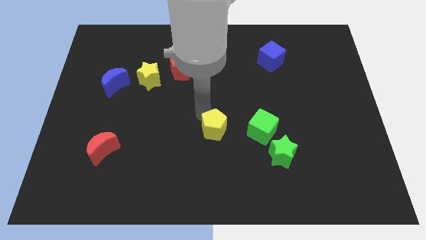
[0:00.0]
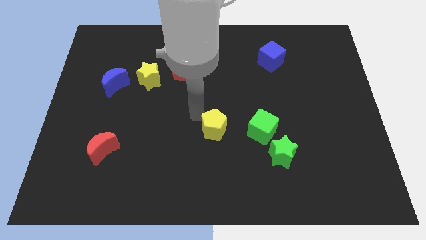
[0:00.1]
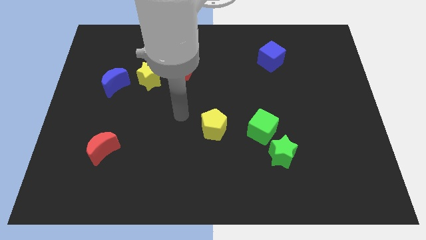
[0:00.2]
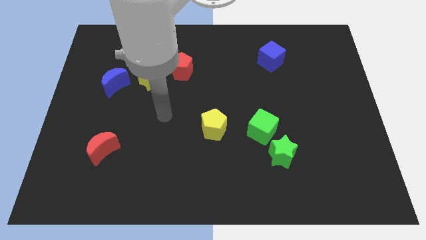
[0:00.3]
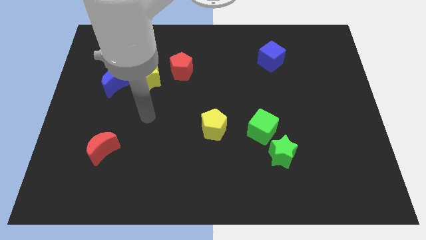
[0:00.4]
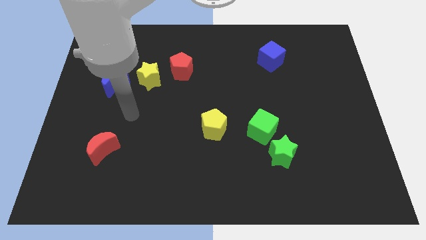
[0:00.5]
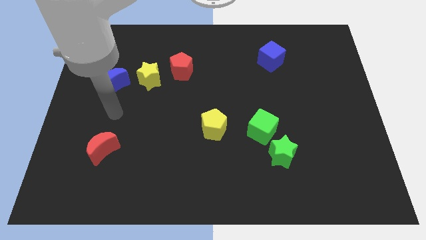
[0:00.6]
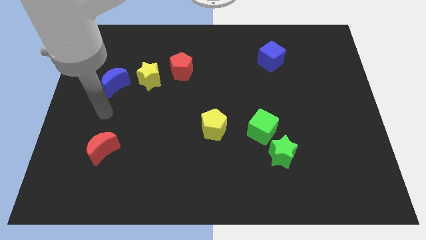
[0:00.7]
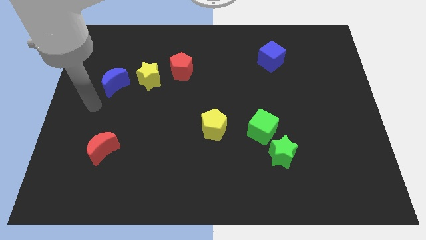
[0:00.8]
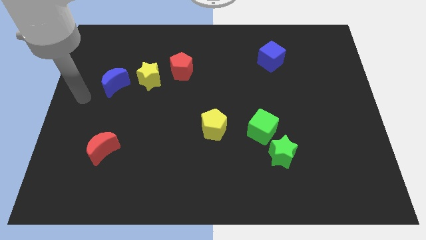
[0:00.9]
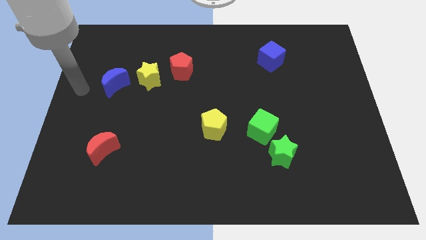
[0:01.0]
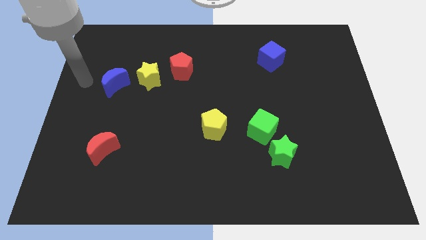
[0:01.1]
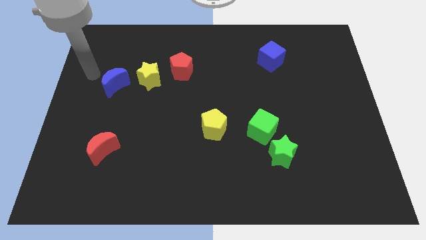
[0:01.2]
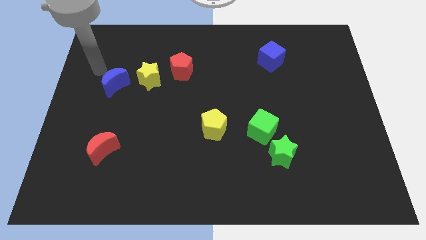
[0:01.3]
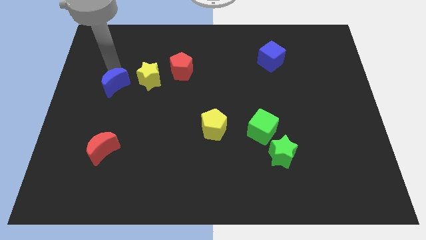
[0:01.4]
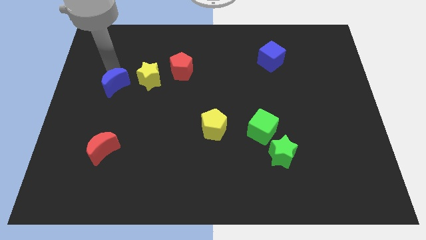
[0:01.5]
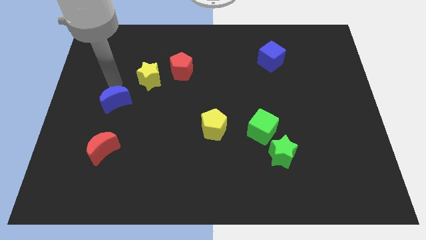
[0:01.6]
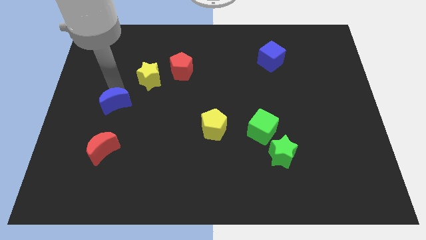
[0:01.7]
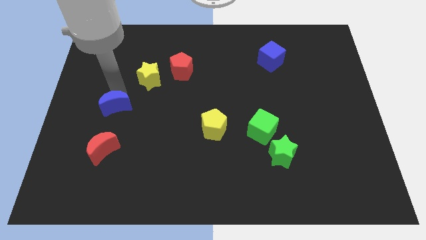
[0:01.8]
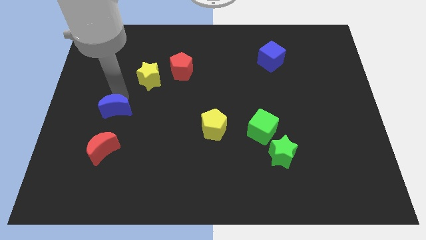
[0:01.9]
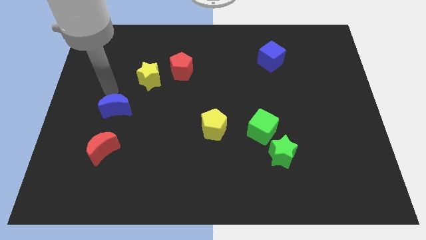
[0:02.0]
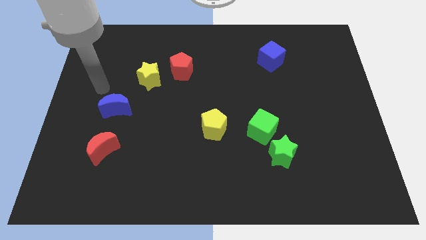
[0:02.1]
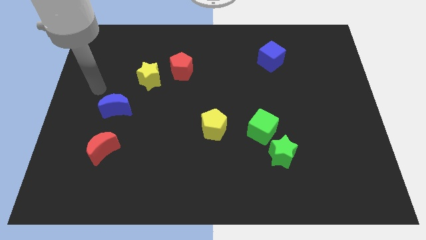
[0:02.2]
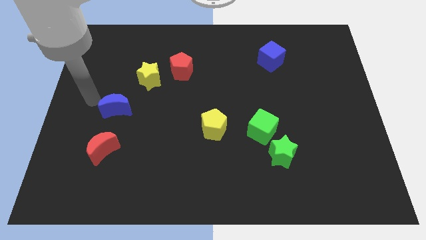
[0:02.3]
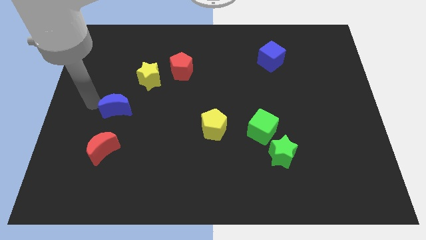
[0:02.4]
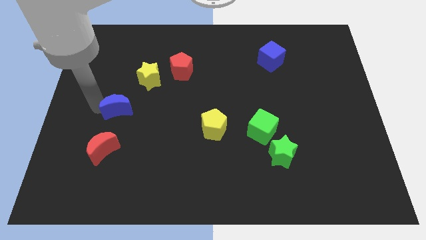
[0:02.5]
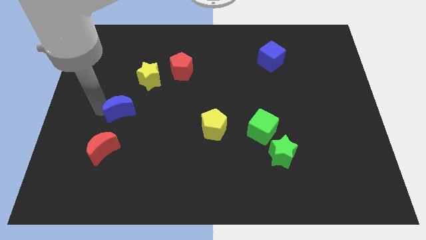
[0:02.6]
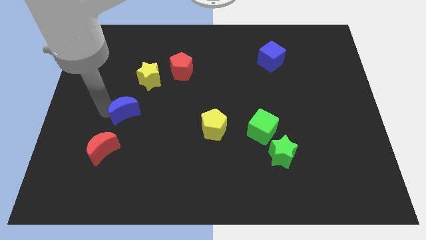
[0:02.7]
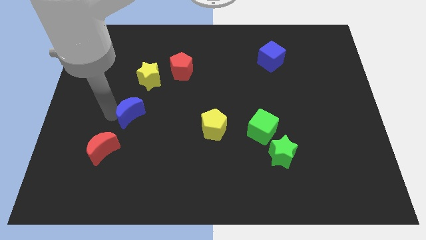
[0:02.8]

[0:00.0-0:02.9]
put the blue moon at the bottom left side of the yellow star

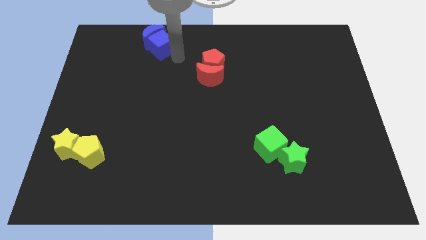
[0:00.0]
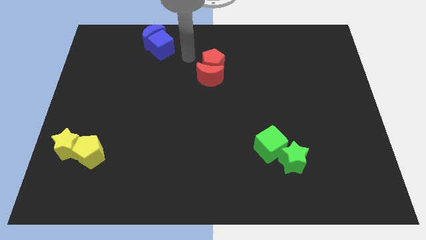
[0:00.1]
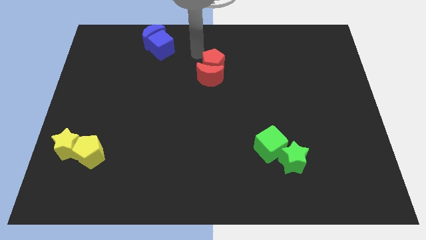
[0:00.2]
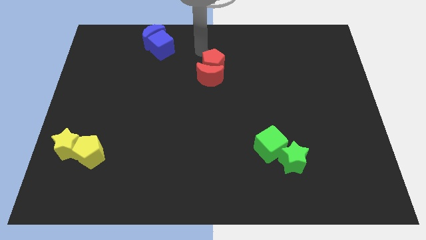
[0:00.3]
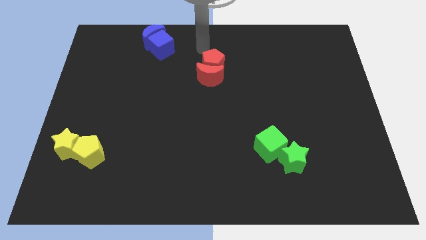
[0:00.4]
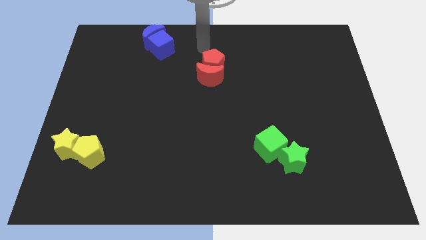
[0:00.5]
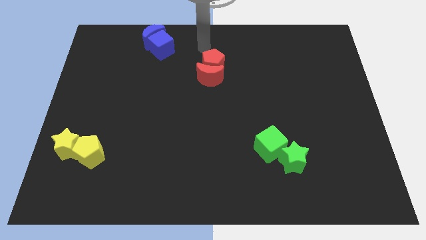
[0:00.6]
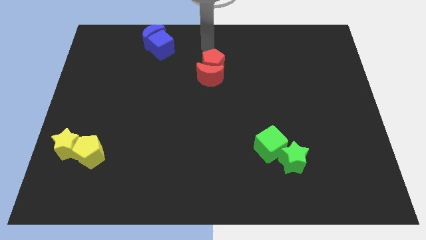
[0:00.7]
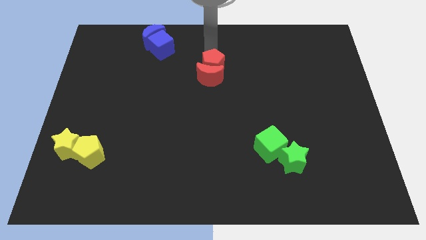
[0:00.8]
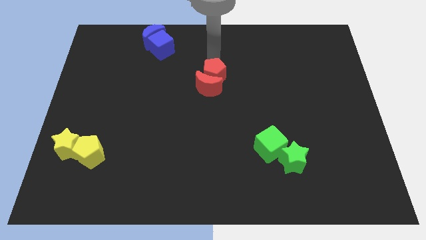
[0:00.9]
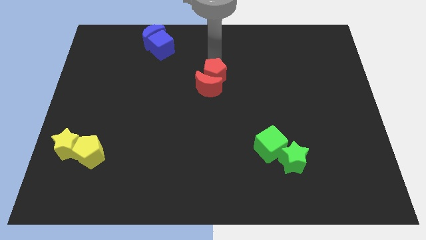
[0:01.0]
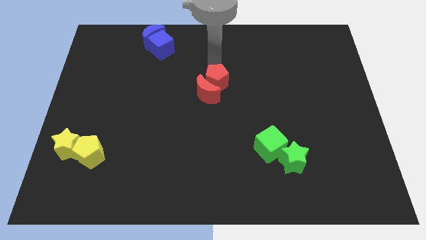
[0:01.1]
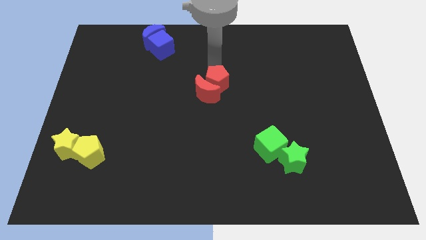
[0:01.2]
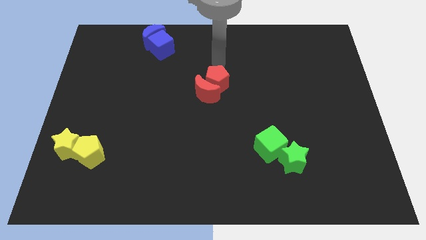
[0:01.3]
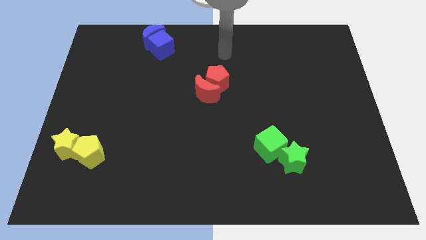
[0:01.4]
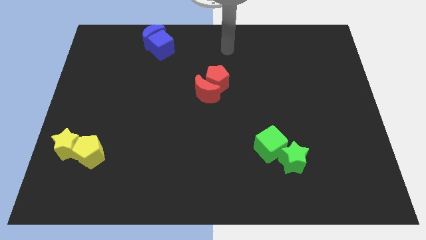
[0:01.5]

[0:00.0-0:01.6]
move the red pentagon and red crescent towards the center of the board

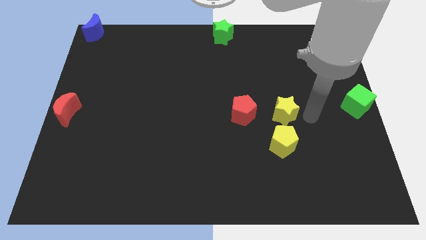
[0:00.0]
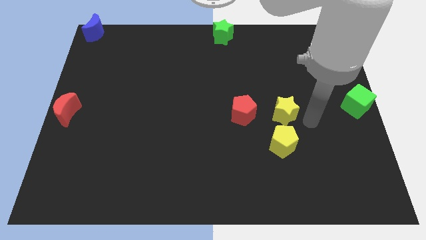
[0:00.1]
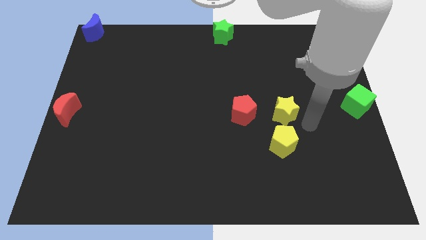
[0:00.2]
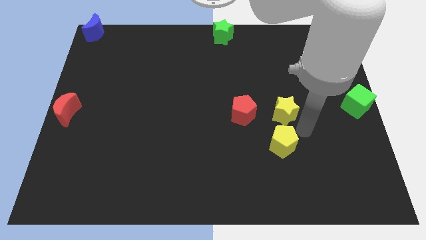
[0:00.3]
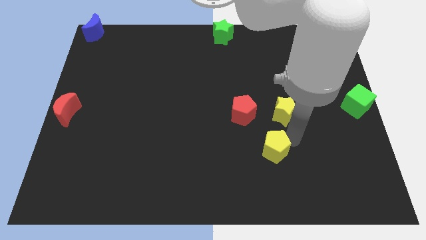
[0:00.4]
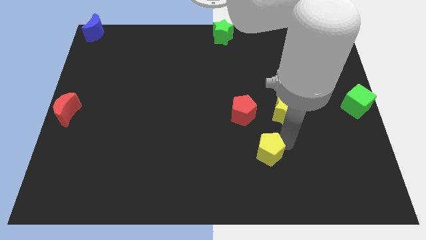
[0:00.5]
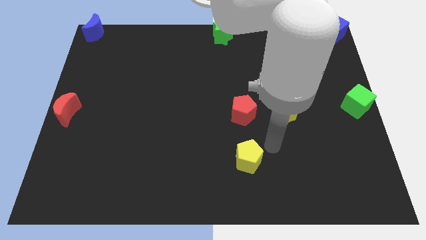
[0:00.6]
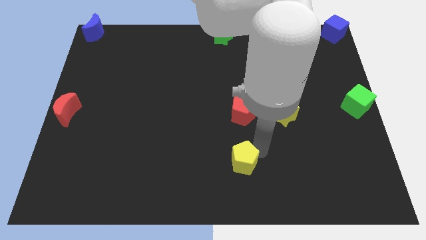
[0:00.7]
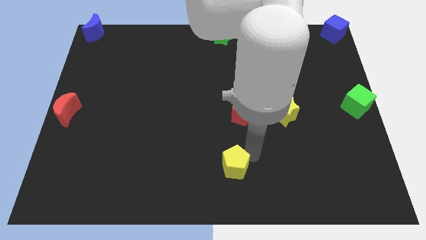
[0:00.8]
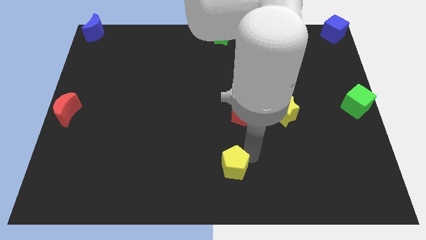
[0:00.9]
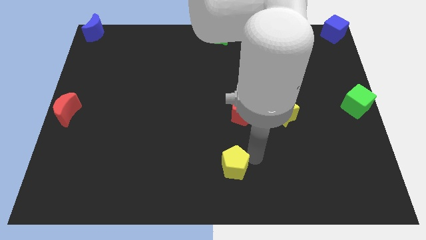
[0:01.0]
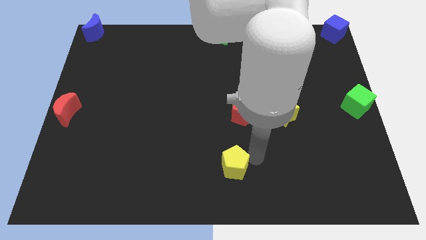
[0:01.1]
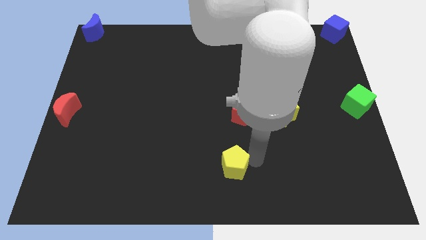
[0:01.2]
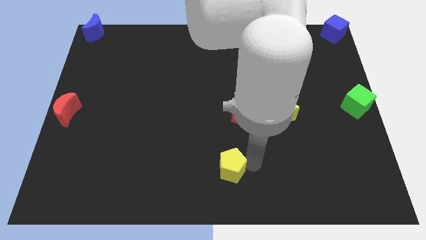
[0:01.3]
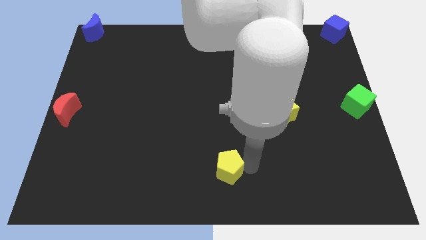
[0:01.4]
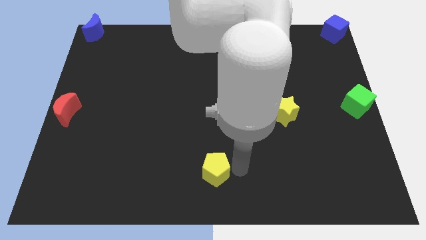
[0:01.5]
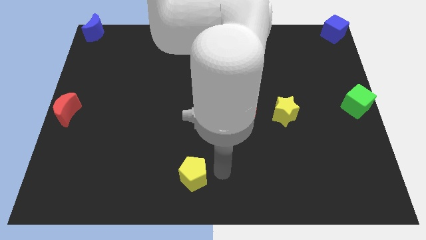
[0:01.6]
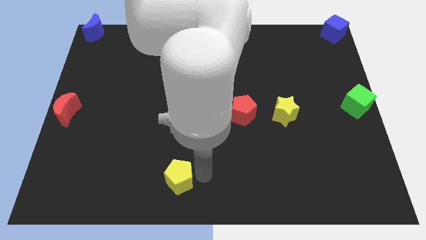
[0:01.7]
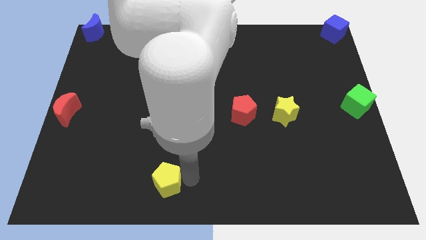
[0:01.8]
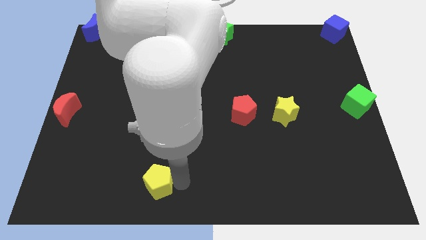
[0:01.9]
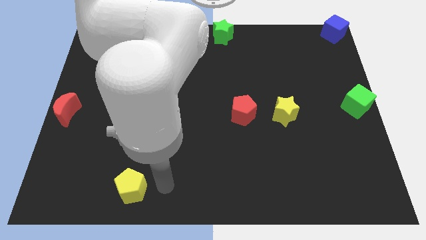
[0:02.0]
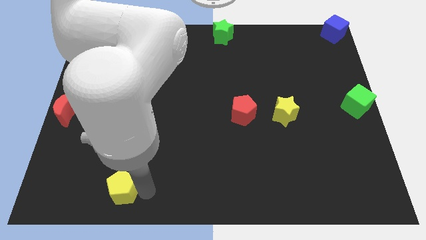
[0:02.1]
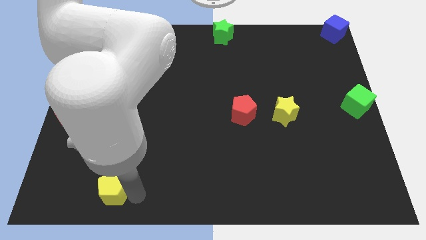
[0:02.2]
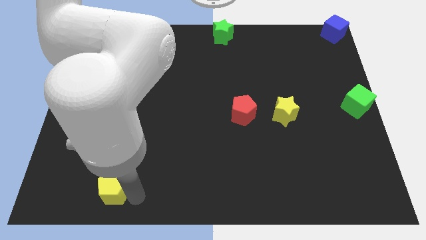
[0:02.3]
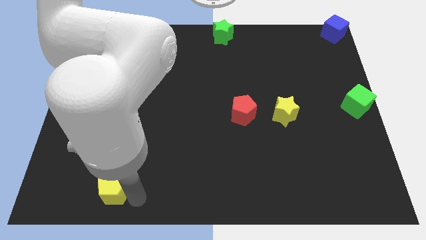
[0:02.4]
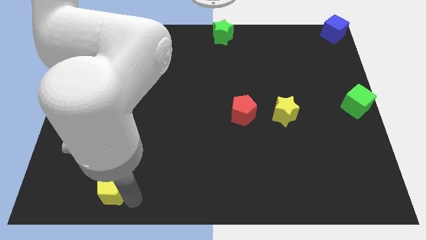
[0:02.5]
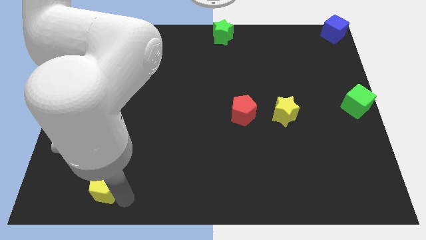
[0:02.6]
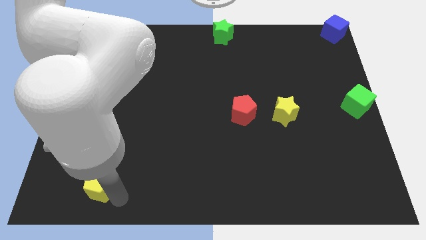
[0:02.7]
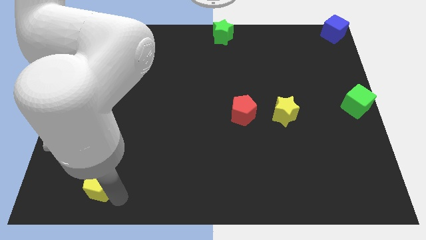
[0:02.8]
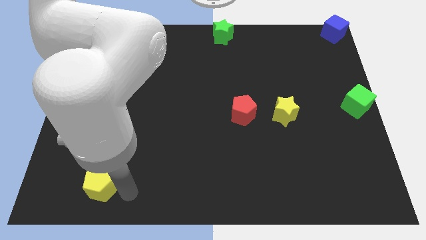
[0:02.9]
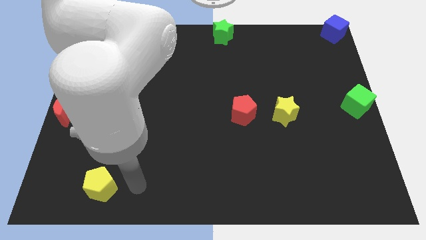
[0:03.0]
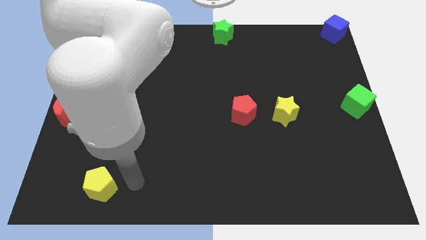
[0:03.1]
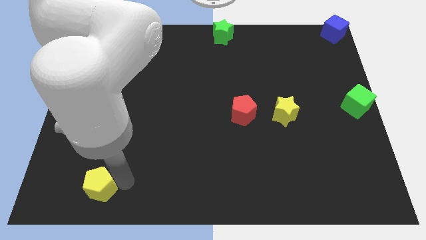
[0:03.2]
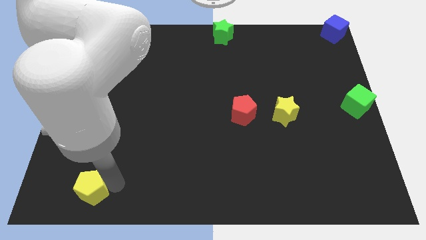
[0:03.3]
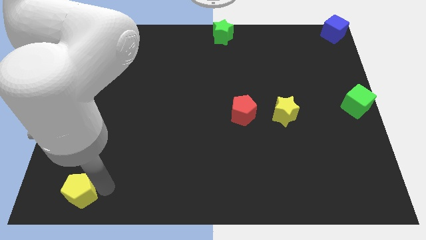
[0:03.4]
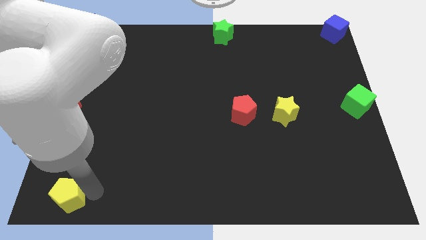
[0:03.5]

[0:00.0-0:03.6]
drag the yellow pentagon towards the bottom left side of the board

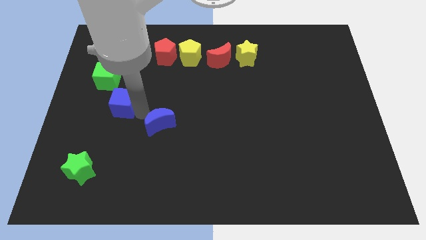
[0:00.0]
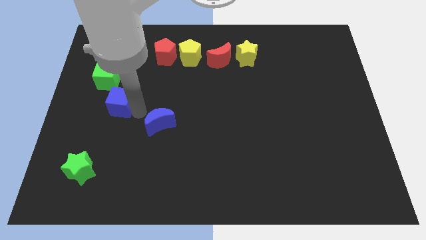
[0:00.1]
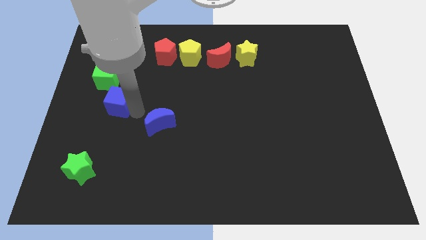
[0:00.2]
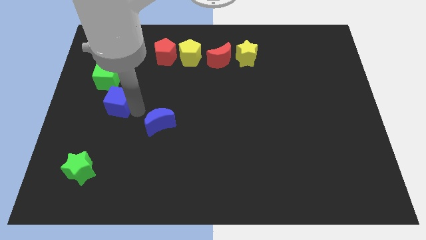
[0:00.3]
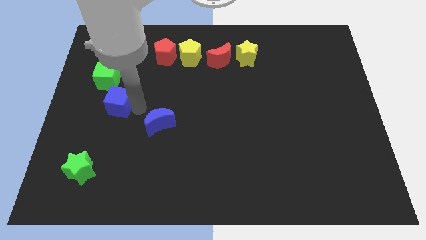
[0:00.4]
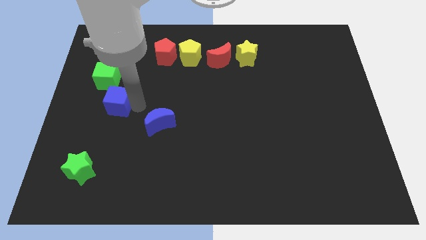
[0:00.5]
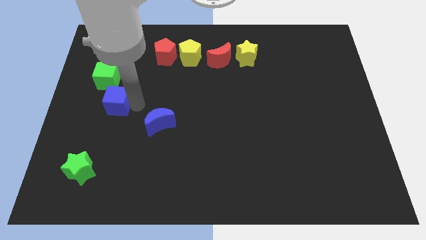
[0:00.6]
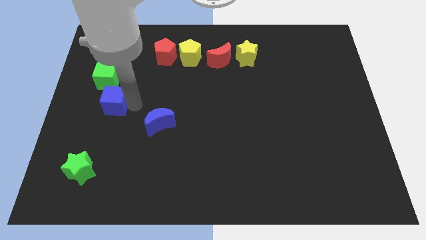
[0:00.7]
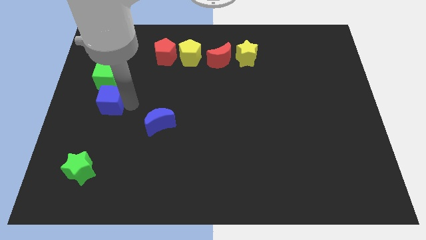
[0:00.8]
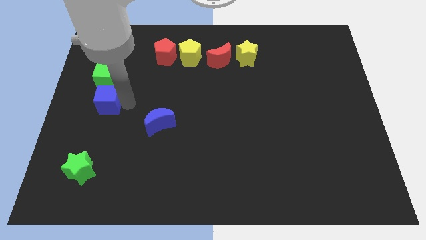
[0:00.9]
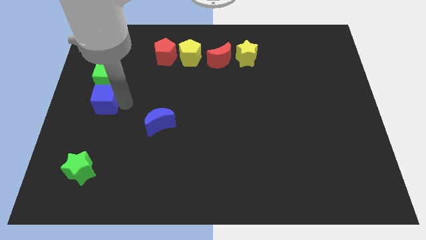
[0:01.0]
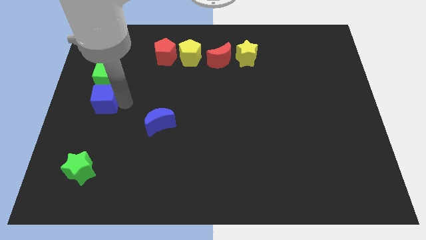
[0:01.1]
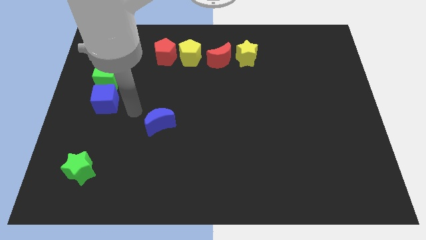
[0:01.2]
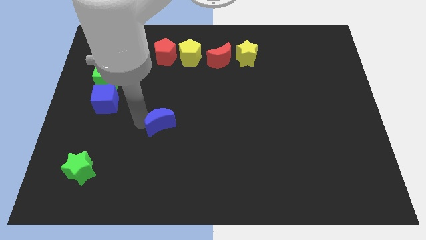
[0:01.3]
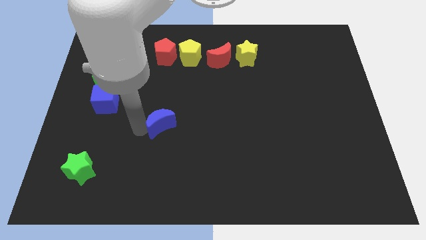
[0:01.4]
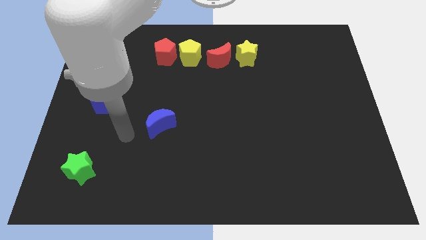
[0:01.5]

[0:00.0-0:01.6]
place the blue cube below the green cube
